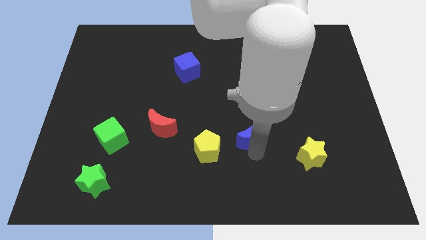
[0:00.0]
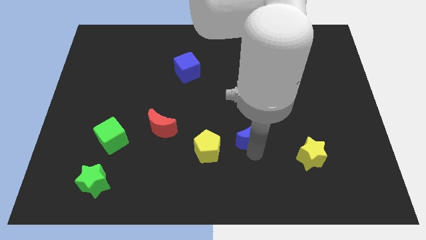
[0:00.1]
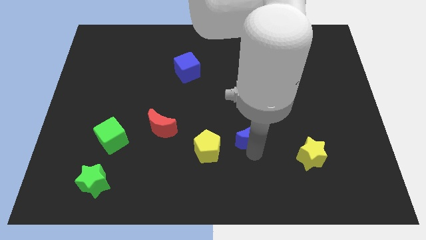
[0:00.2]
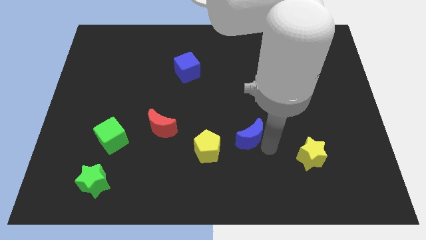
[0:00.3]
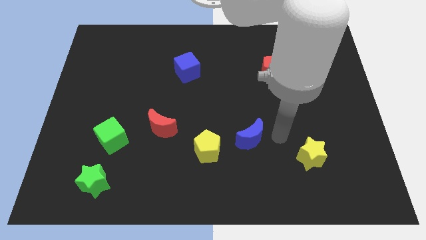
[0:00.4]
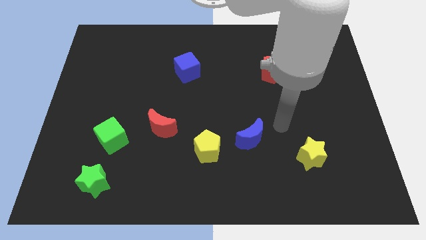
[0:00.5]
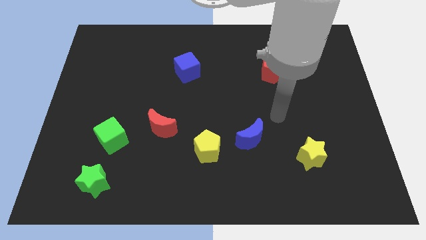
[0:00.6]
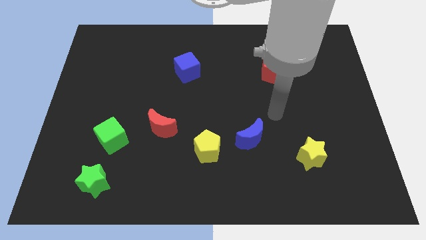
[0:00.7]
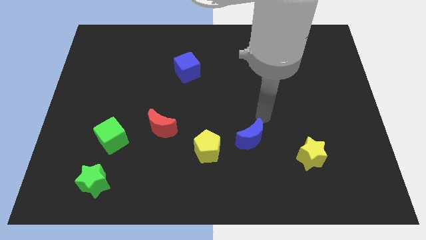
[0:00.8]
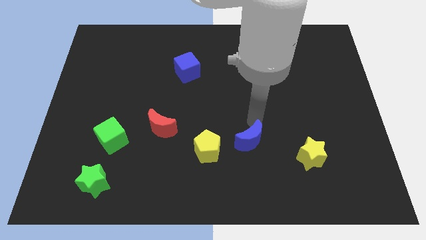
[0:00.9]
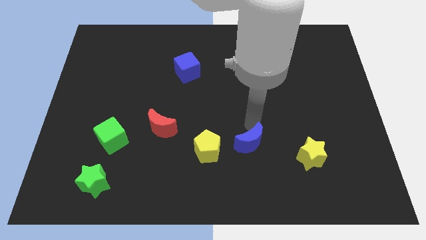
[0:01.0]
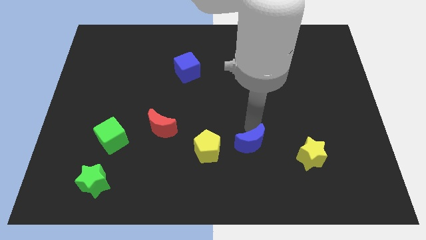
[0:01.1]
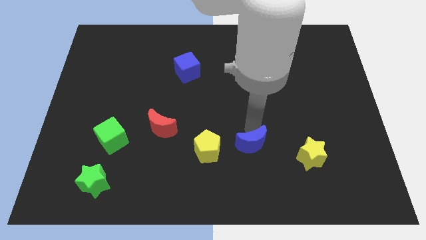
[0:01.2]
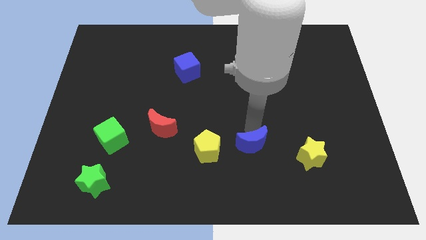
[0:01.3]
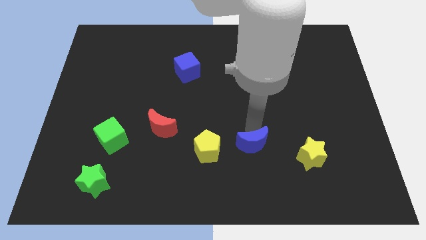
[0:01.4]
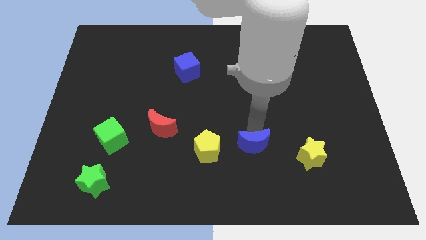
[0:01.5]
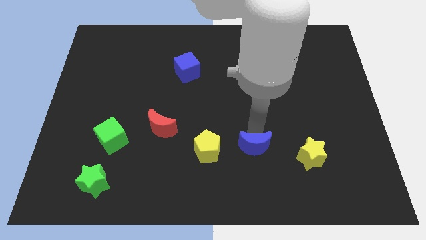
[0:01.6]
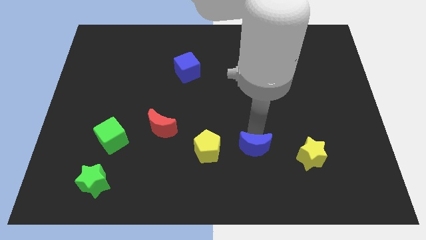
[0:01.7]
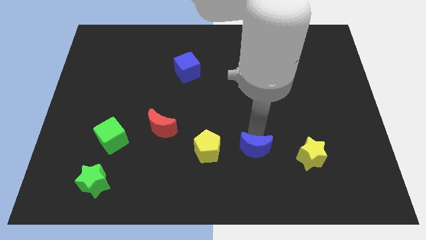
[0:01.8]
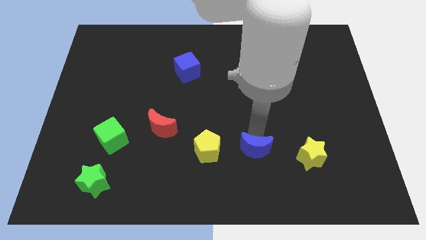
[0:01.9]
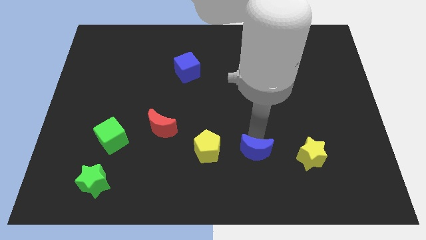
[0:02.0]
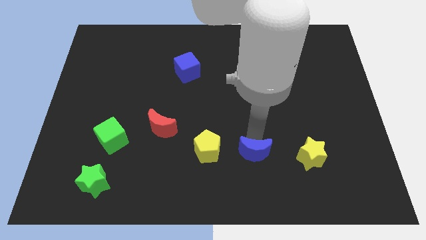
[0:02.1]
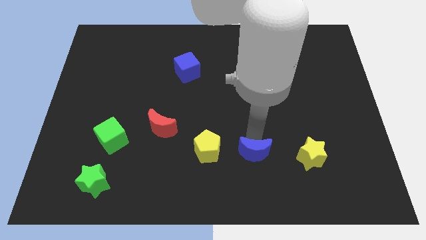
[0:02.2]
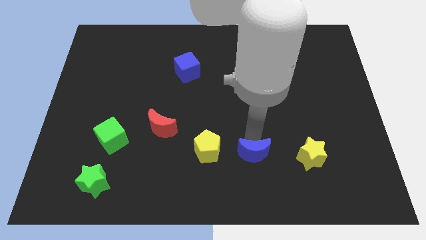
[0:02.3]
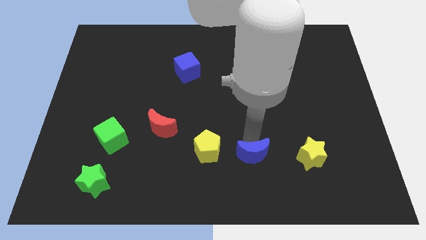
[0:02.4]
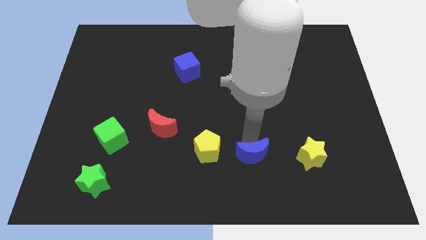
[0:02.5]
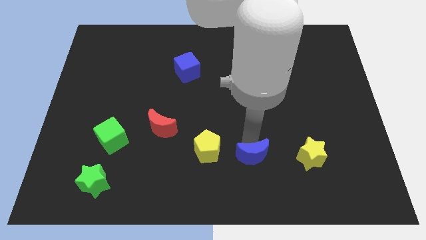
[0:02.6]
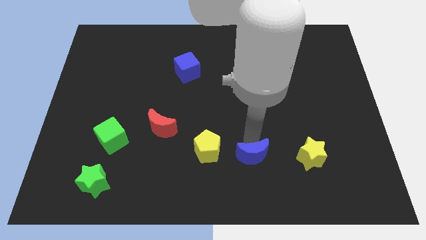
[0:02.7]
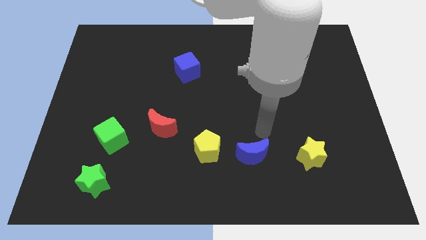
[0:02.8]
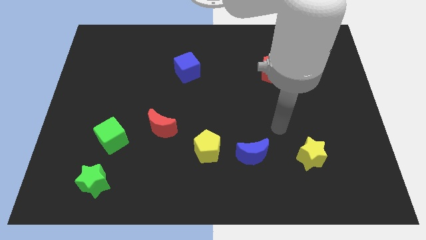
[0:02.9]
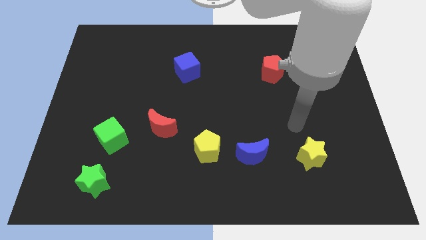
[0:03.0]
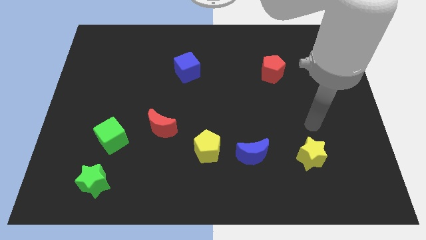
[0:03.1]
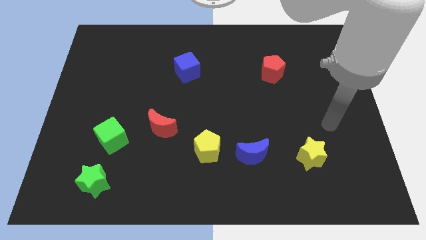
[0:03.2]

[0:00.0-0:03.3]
place blue moon to the right of the yellow pentagon

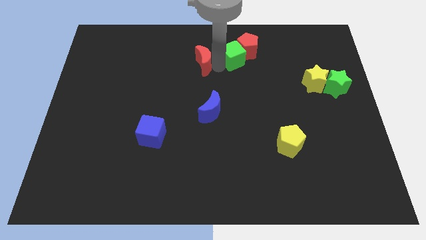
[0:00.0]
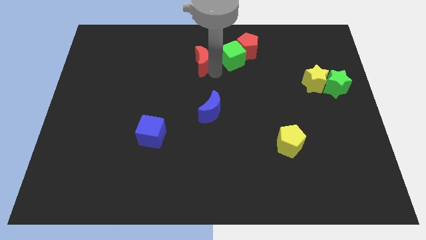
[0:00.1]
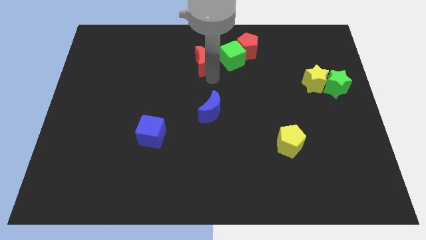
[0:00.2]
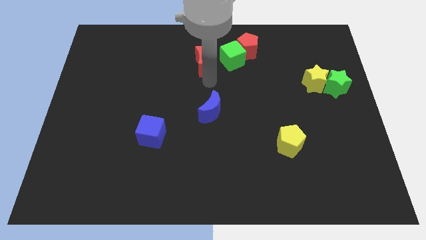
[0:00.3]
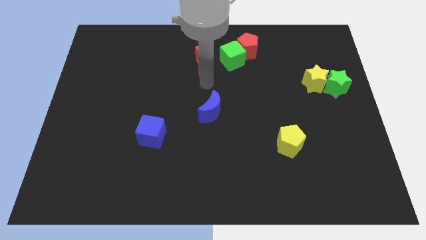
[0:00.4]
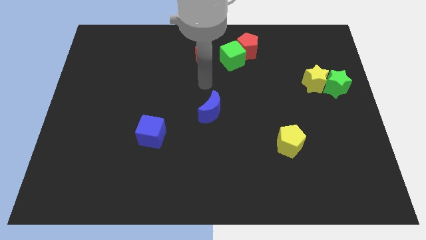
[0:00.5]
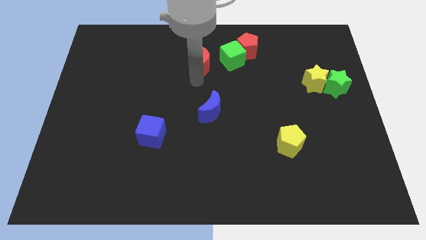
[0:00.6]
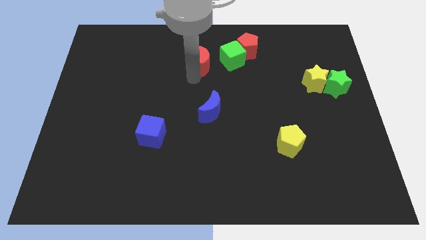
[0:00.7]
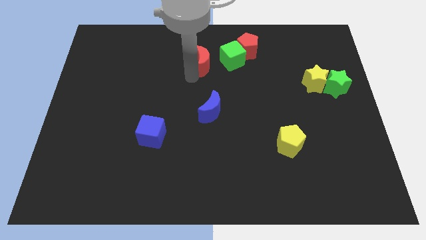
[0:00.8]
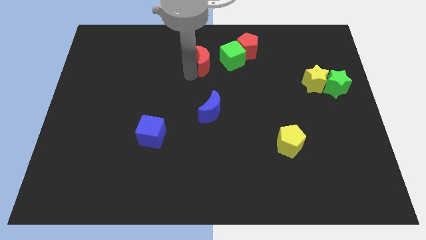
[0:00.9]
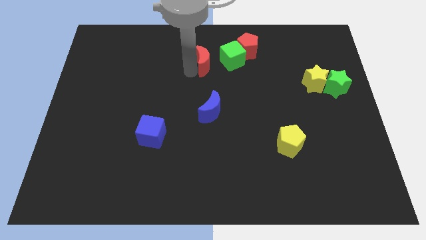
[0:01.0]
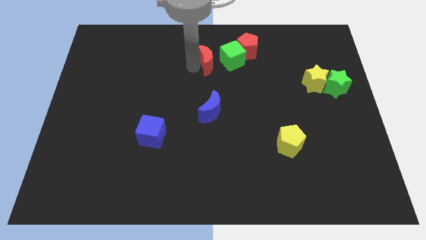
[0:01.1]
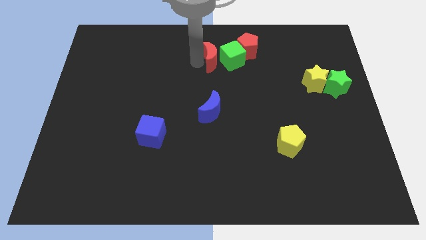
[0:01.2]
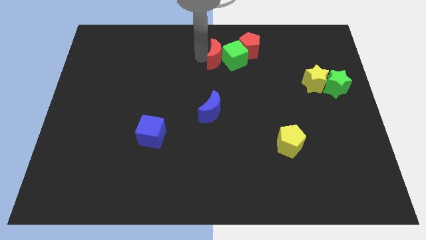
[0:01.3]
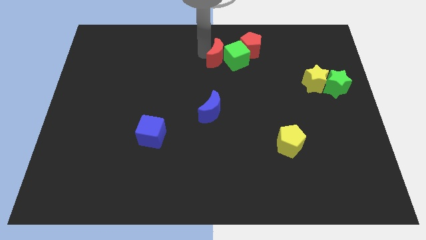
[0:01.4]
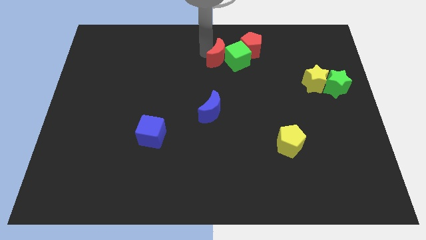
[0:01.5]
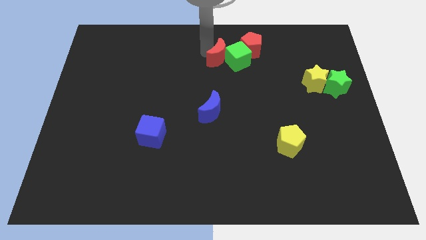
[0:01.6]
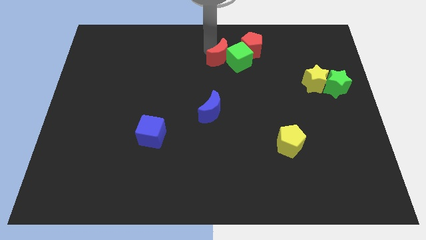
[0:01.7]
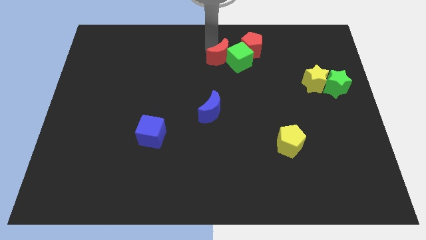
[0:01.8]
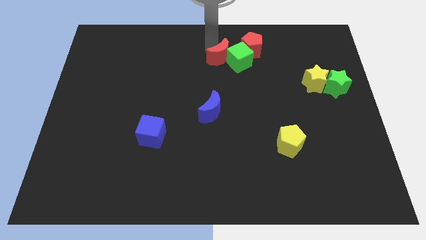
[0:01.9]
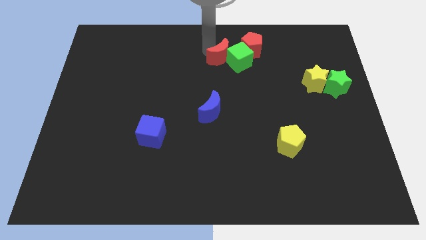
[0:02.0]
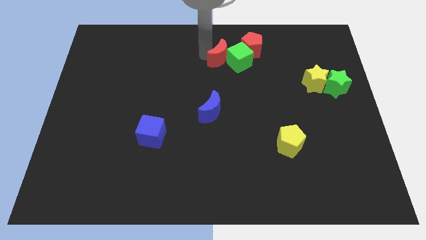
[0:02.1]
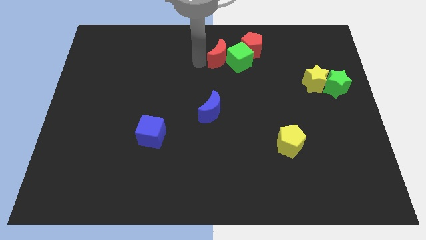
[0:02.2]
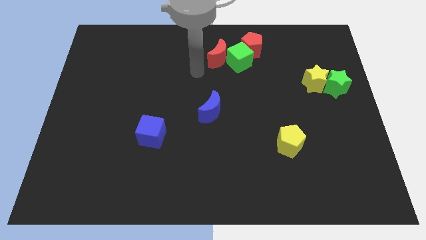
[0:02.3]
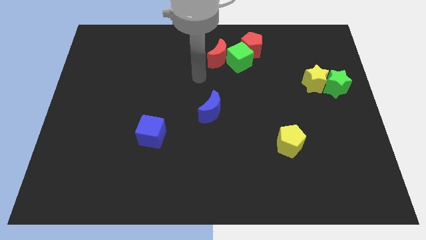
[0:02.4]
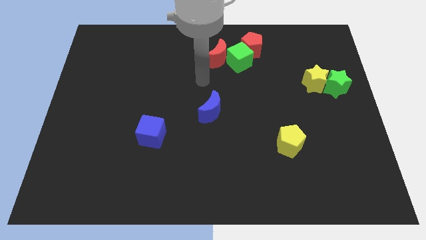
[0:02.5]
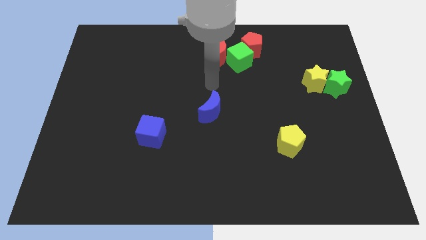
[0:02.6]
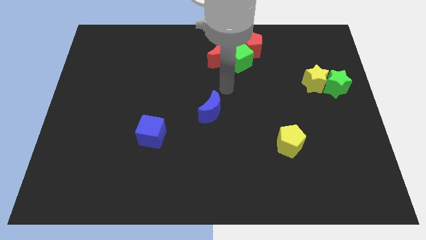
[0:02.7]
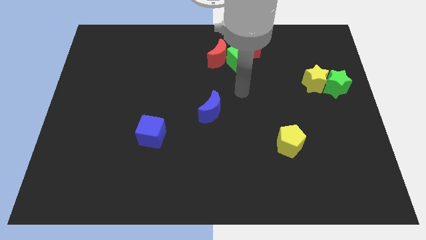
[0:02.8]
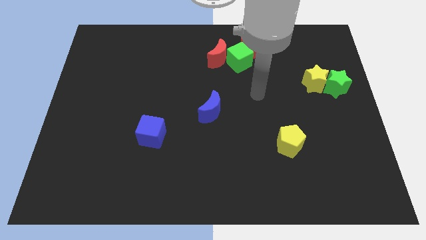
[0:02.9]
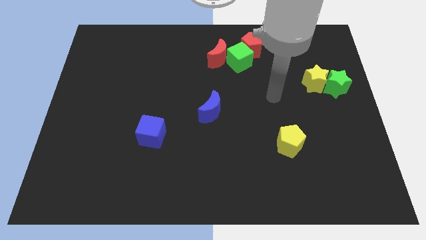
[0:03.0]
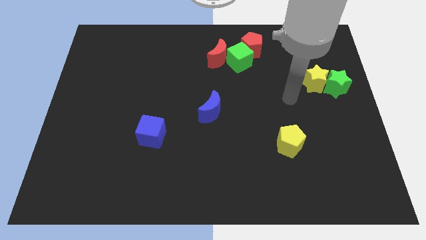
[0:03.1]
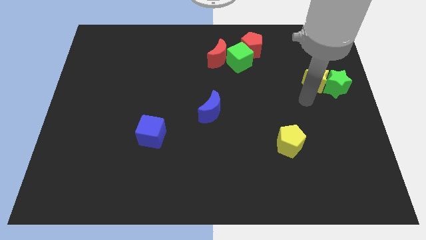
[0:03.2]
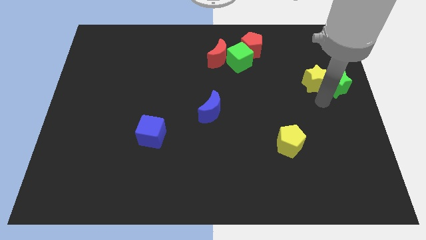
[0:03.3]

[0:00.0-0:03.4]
push red moon into the green cube

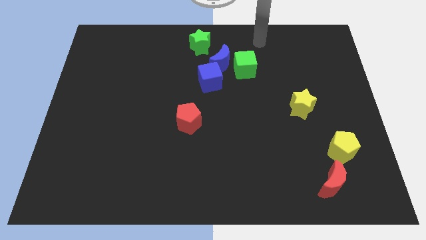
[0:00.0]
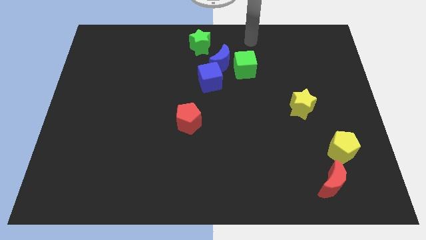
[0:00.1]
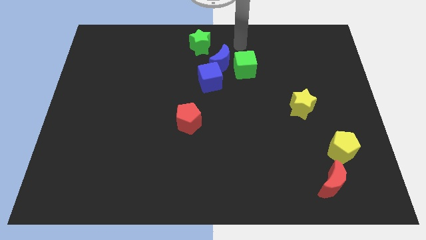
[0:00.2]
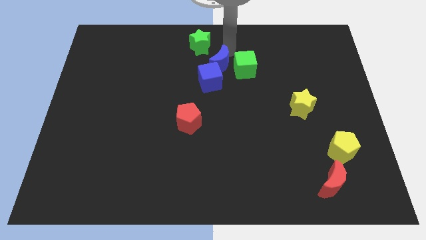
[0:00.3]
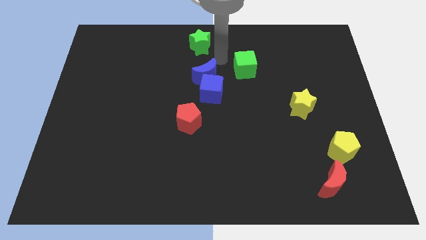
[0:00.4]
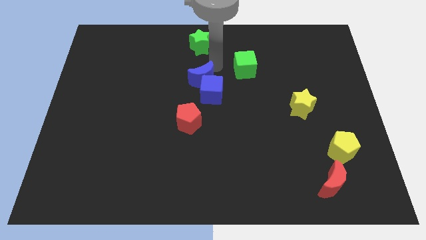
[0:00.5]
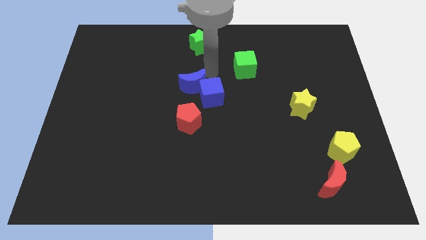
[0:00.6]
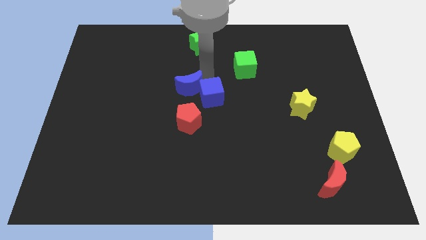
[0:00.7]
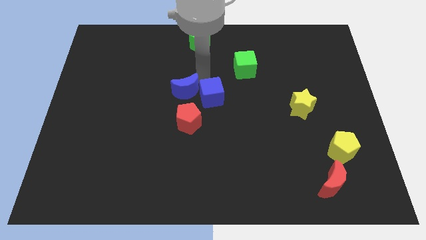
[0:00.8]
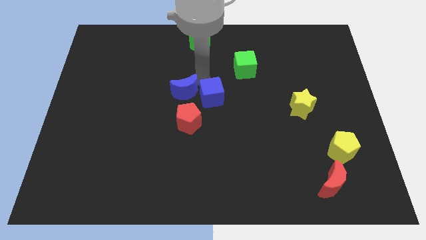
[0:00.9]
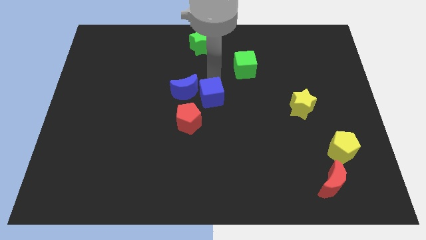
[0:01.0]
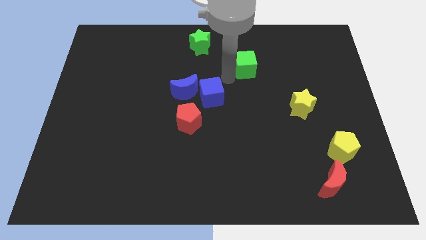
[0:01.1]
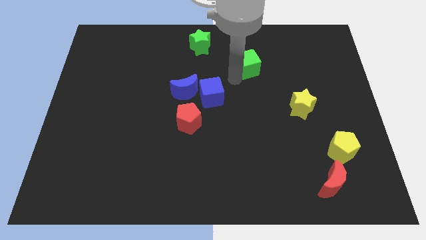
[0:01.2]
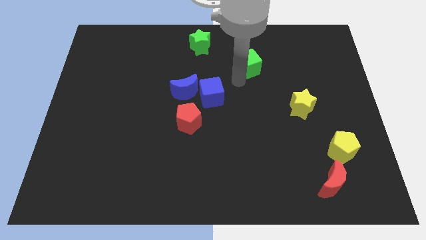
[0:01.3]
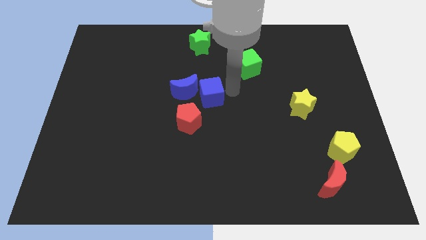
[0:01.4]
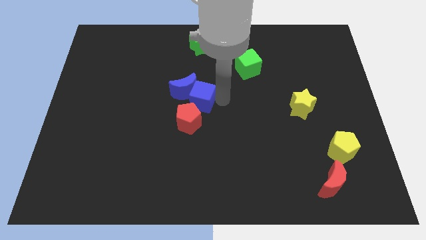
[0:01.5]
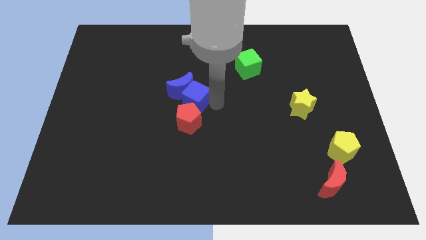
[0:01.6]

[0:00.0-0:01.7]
push the blue cube into the blue moon

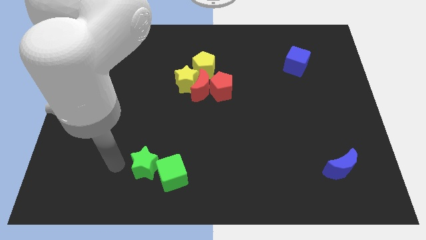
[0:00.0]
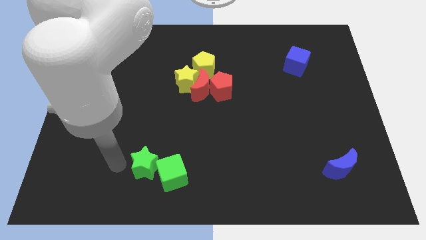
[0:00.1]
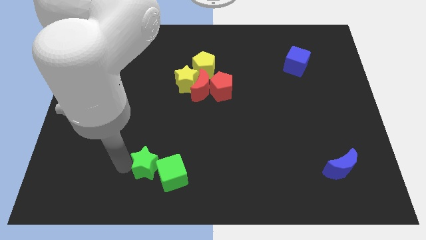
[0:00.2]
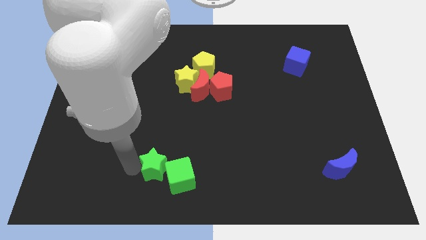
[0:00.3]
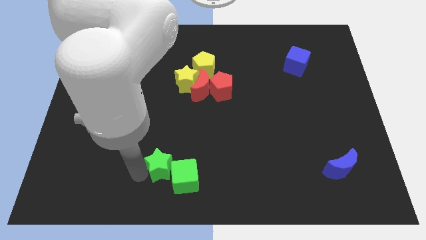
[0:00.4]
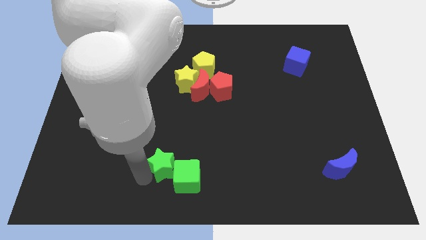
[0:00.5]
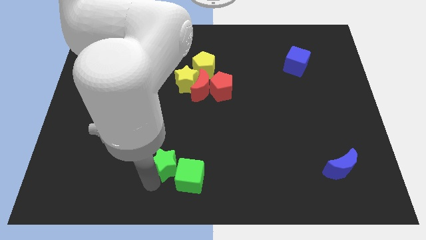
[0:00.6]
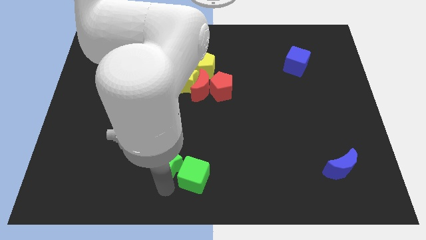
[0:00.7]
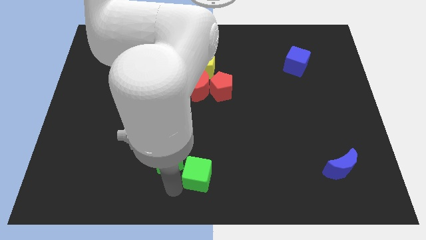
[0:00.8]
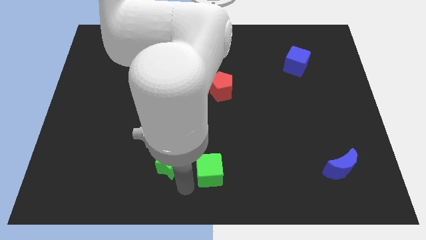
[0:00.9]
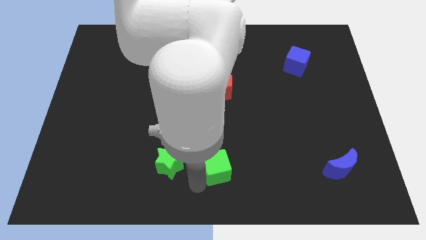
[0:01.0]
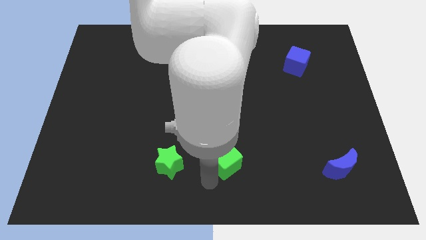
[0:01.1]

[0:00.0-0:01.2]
move the green cube slightly right to the green star
